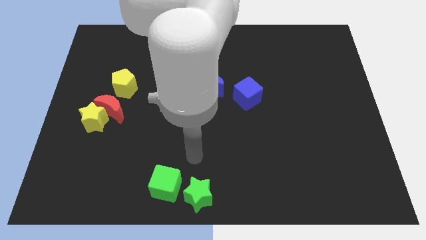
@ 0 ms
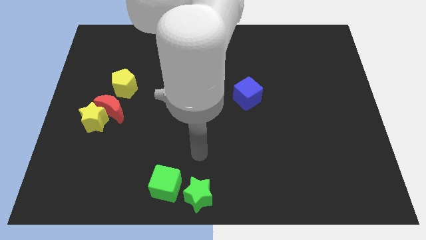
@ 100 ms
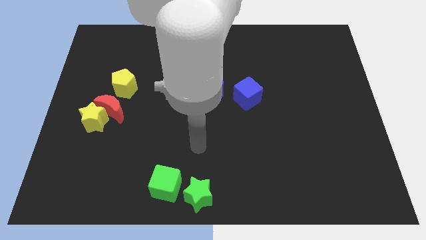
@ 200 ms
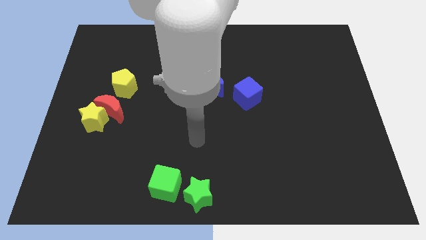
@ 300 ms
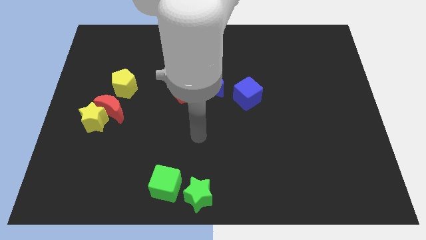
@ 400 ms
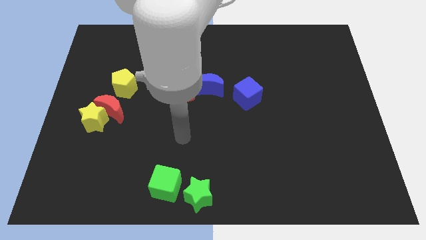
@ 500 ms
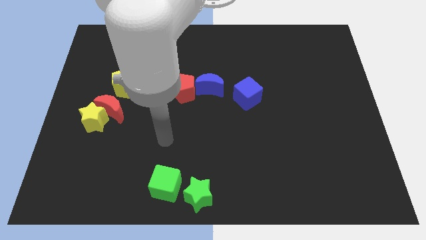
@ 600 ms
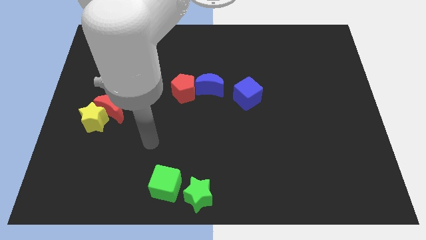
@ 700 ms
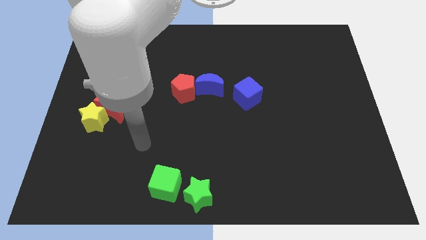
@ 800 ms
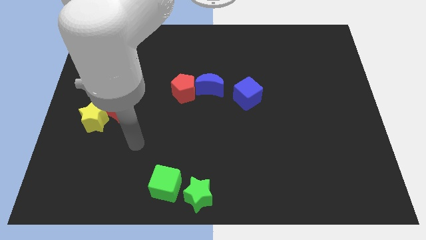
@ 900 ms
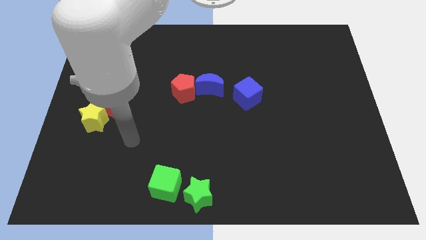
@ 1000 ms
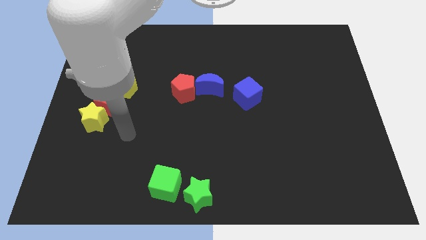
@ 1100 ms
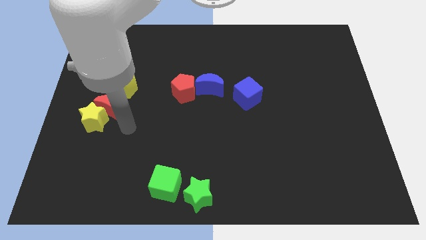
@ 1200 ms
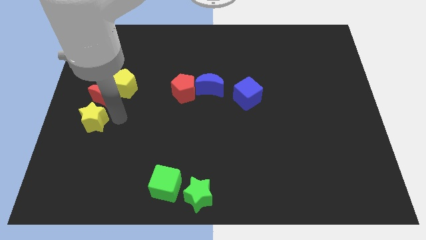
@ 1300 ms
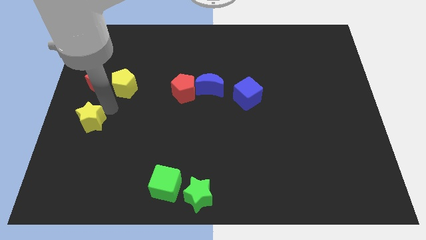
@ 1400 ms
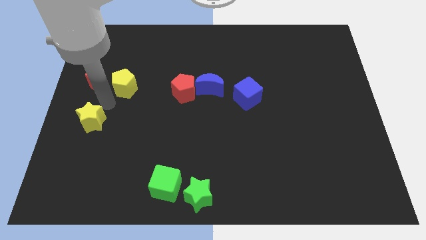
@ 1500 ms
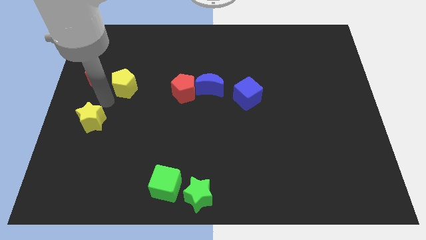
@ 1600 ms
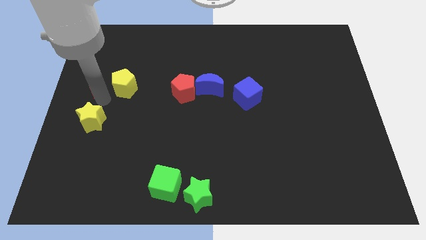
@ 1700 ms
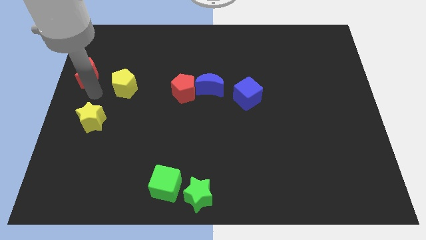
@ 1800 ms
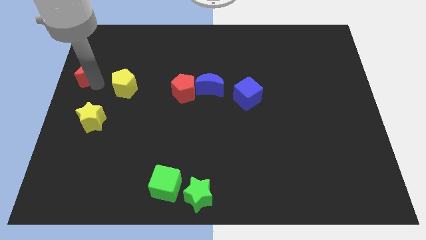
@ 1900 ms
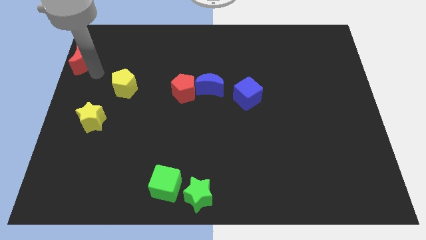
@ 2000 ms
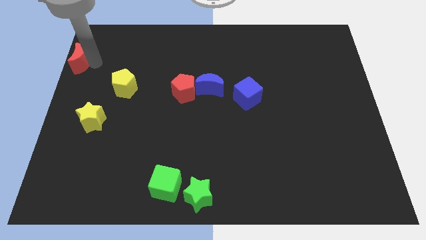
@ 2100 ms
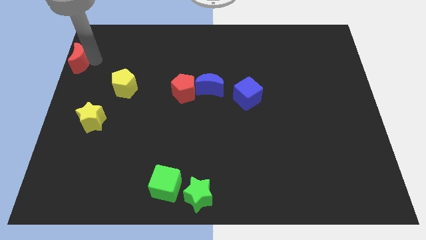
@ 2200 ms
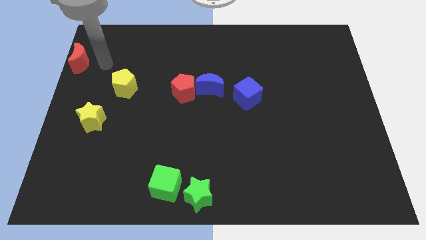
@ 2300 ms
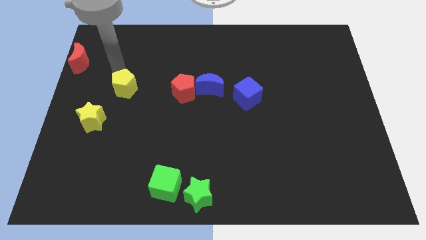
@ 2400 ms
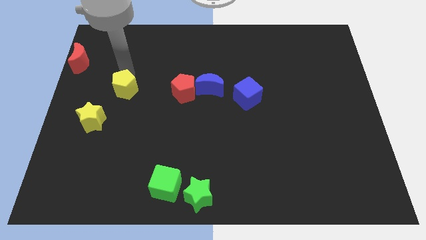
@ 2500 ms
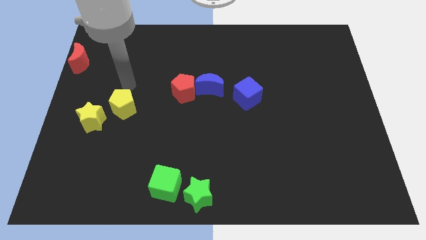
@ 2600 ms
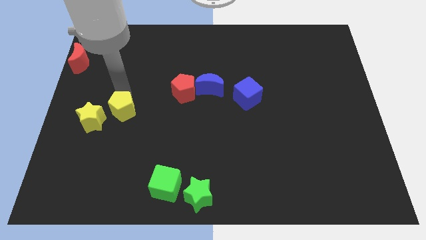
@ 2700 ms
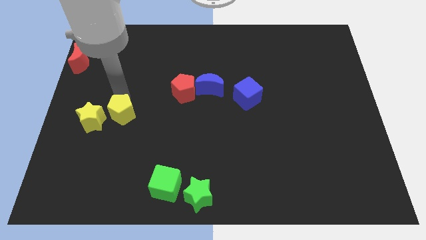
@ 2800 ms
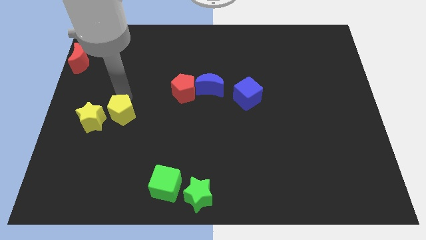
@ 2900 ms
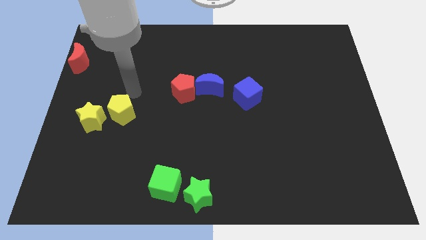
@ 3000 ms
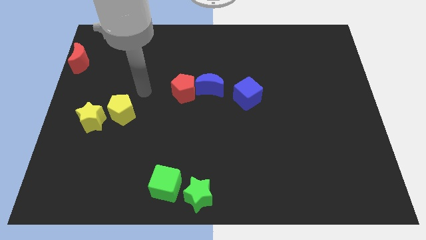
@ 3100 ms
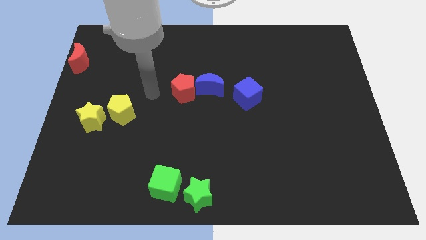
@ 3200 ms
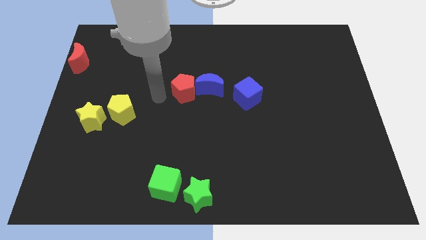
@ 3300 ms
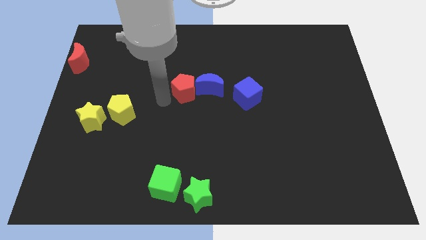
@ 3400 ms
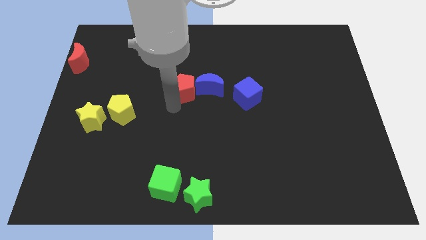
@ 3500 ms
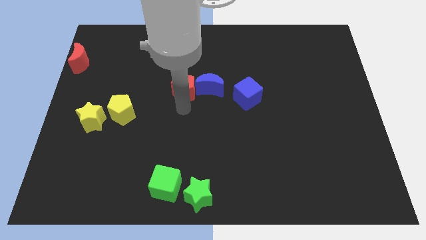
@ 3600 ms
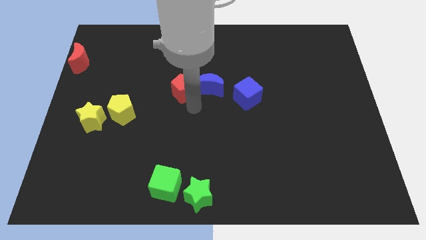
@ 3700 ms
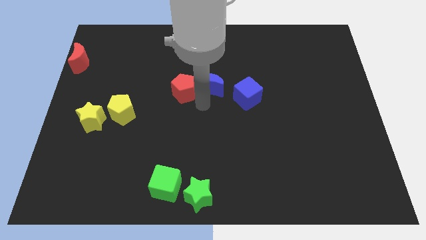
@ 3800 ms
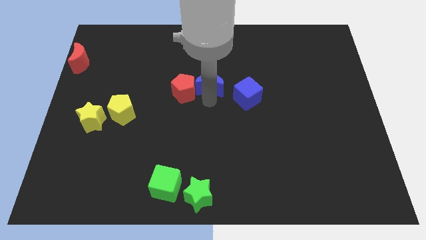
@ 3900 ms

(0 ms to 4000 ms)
separate the red moon from yellow star and yellow pentagon

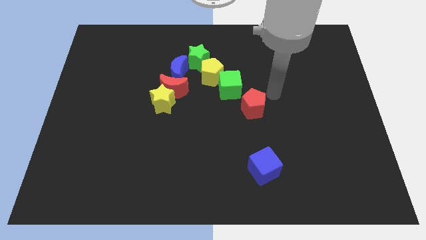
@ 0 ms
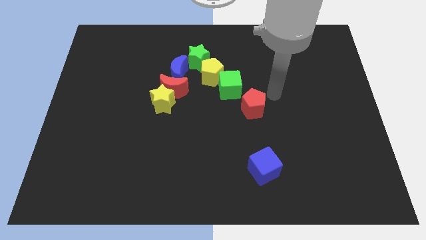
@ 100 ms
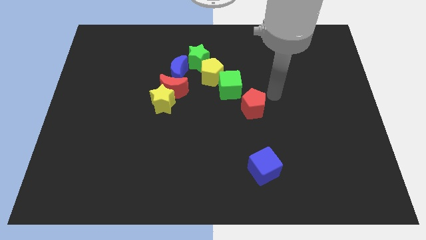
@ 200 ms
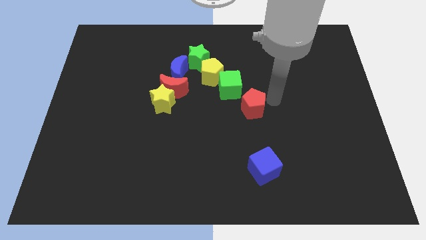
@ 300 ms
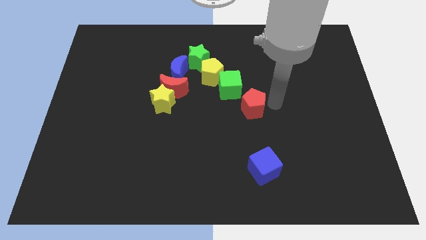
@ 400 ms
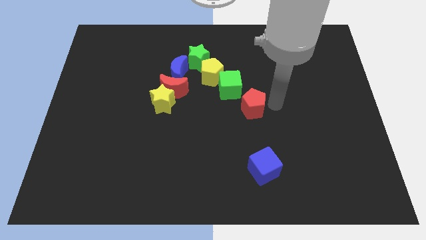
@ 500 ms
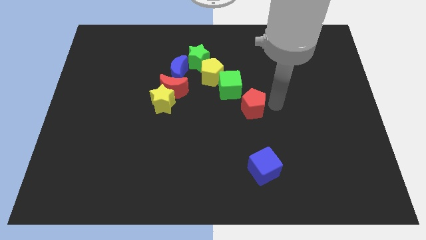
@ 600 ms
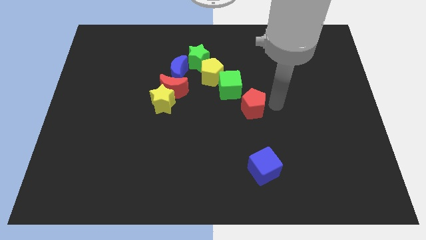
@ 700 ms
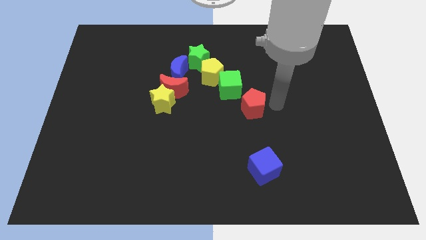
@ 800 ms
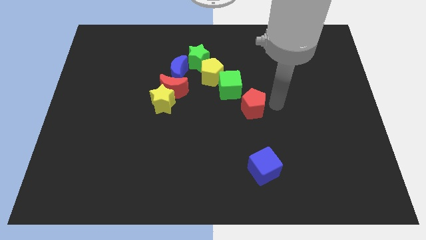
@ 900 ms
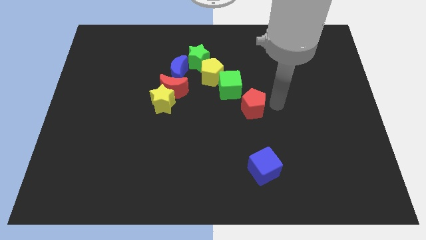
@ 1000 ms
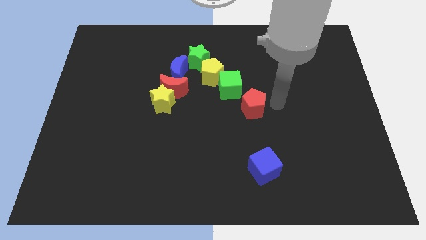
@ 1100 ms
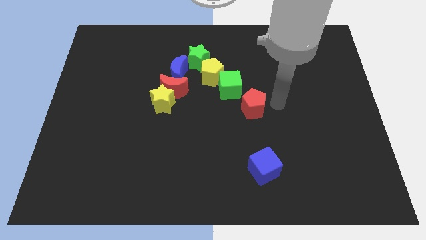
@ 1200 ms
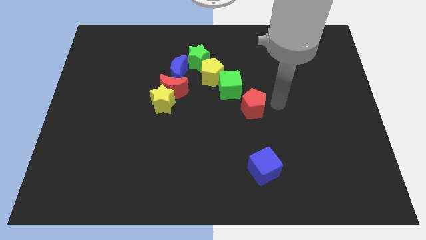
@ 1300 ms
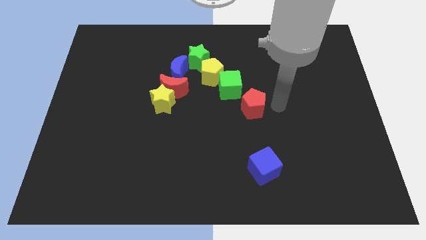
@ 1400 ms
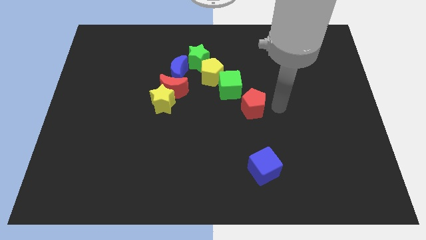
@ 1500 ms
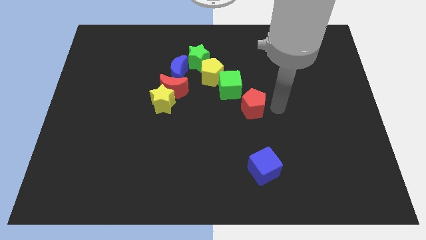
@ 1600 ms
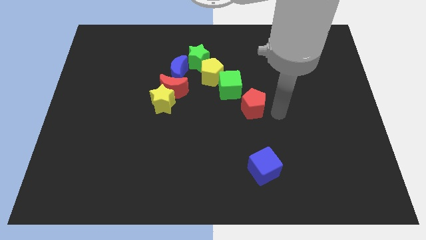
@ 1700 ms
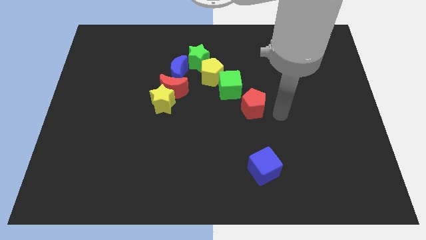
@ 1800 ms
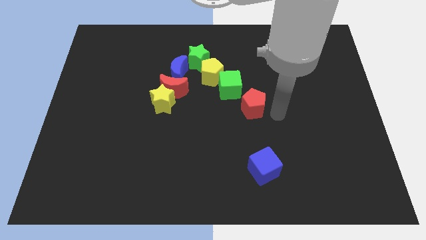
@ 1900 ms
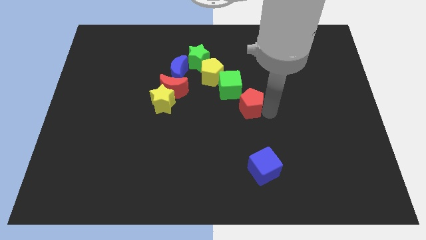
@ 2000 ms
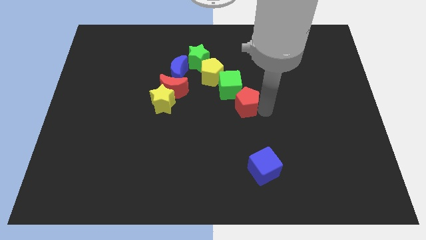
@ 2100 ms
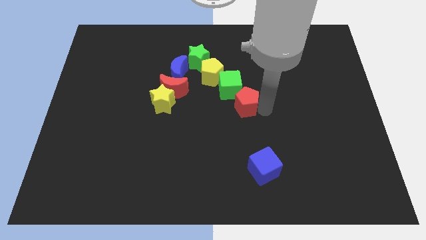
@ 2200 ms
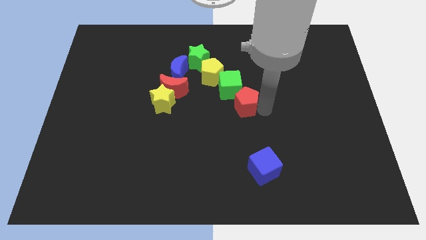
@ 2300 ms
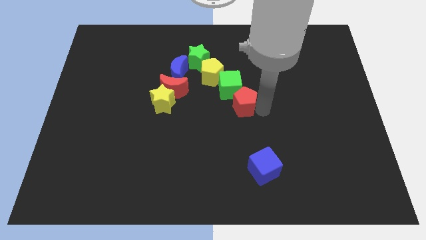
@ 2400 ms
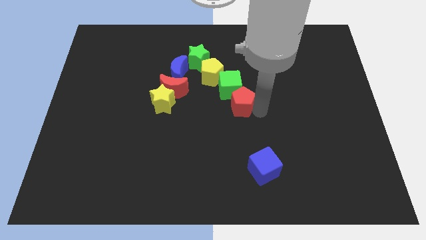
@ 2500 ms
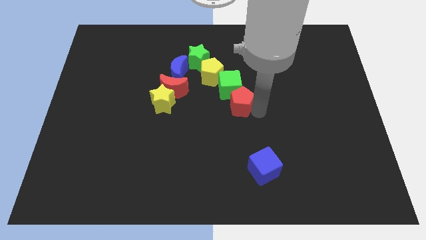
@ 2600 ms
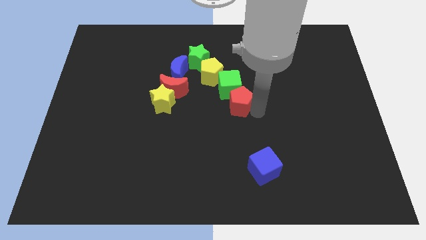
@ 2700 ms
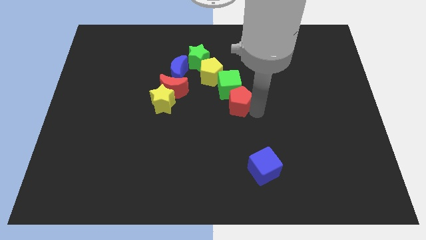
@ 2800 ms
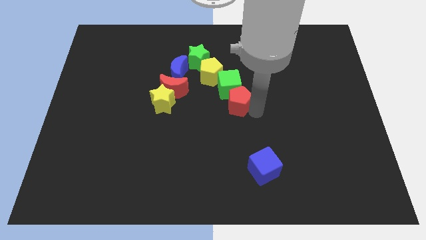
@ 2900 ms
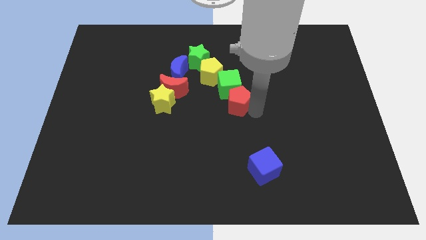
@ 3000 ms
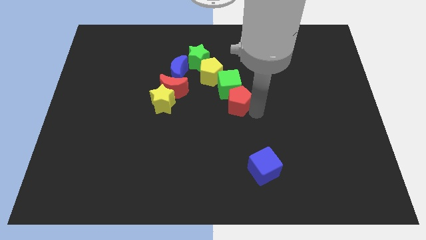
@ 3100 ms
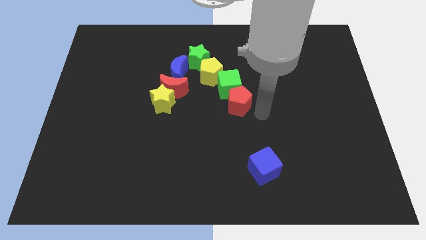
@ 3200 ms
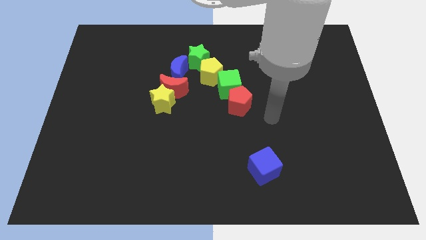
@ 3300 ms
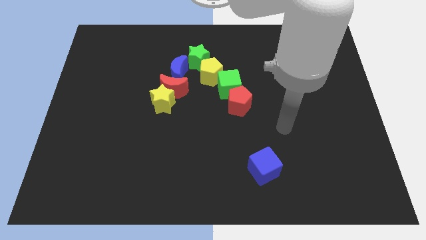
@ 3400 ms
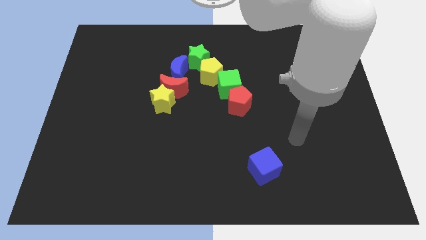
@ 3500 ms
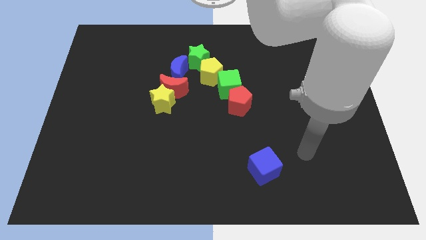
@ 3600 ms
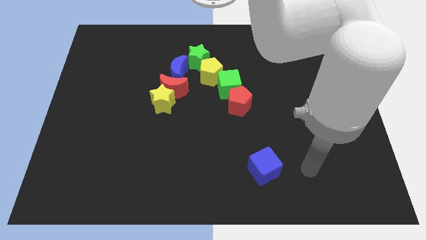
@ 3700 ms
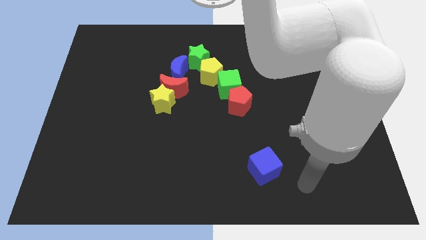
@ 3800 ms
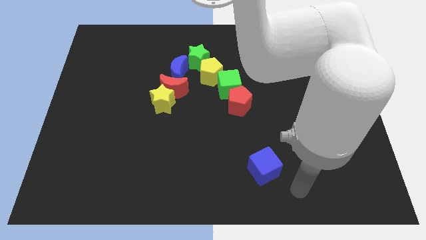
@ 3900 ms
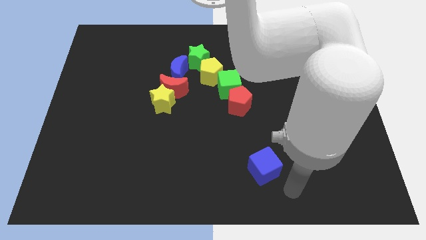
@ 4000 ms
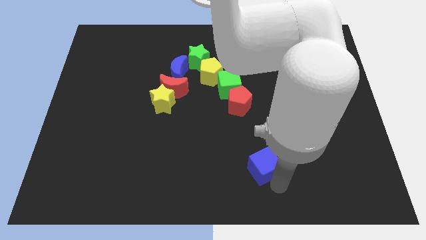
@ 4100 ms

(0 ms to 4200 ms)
move your arm towards the blue cube

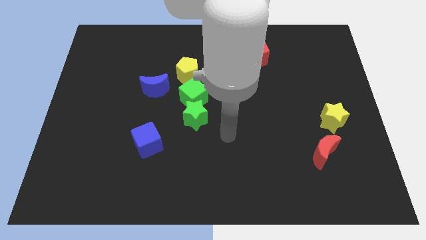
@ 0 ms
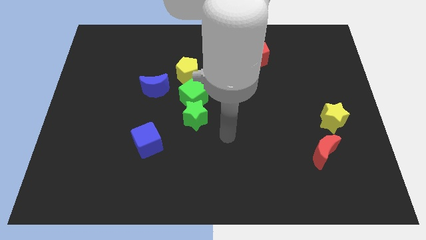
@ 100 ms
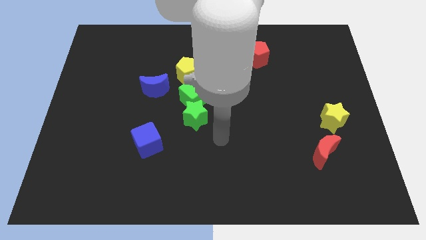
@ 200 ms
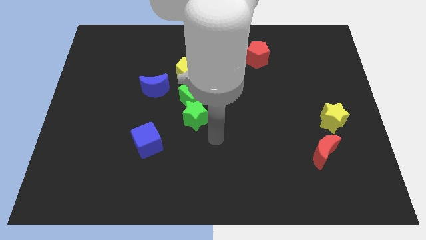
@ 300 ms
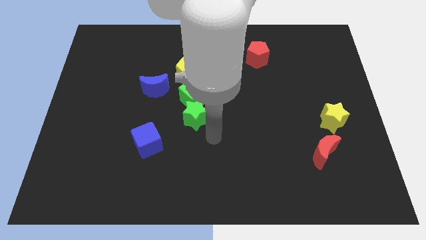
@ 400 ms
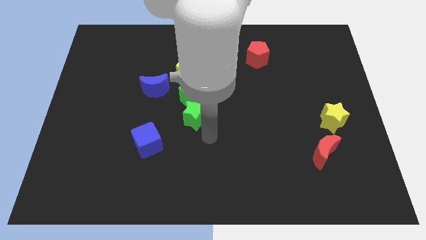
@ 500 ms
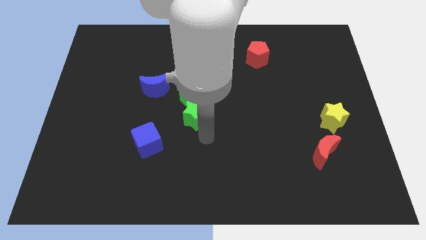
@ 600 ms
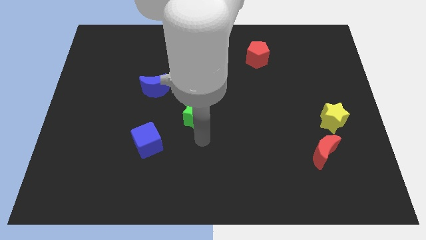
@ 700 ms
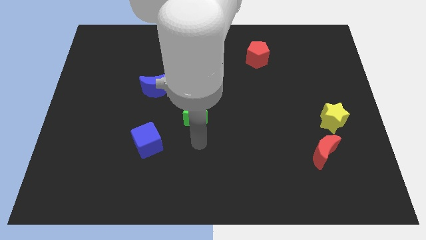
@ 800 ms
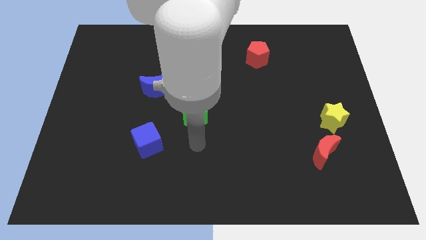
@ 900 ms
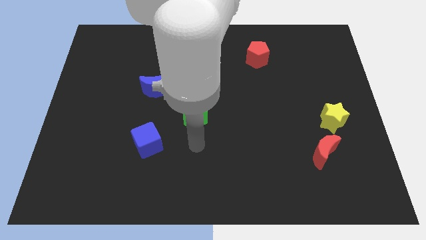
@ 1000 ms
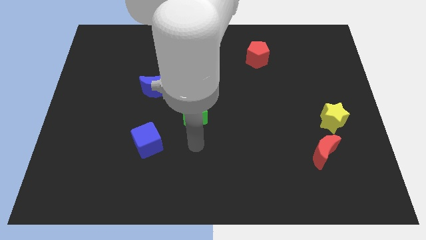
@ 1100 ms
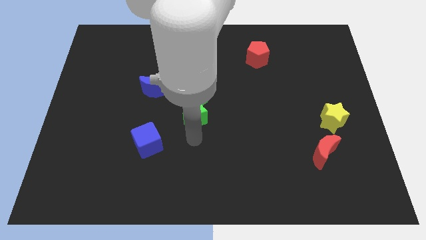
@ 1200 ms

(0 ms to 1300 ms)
place your arm to the bottom of the green star
